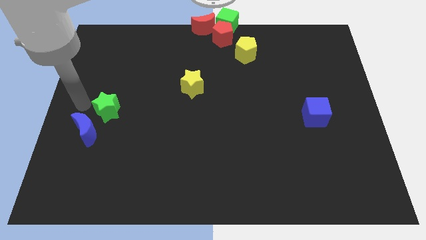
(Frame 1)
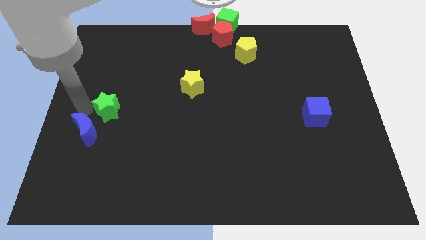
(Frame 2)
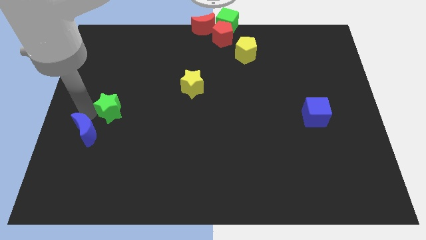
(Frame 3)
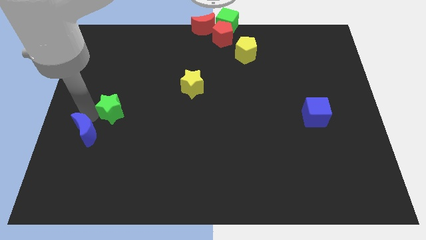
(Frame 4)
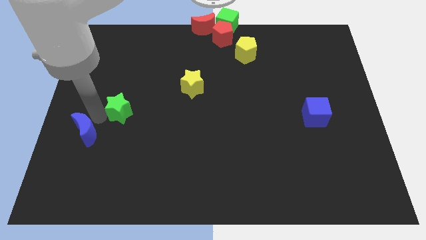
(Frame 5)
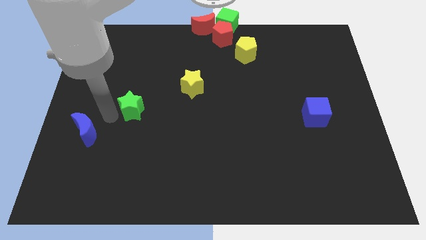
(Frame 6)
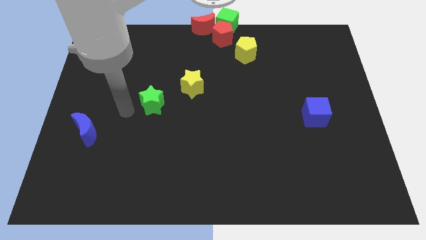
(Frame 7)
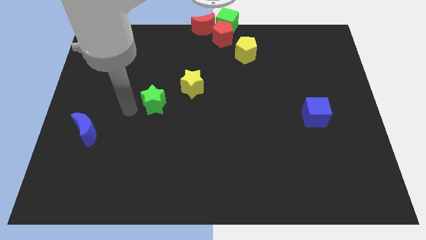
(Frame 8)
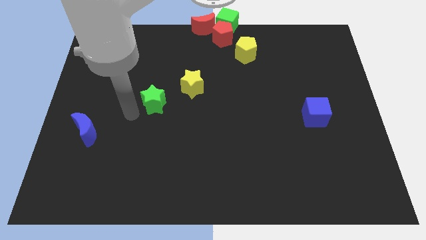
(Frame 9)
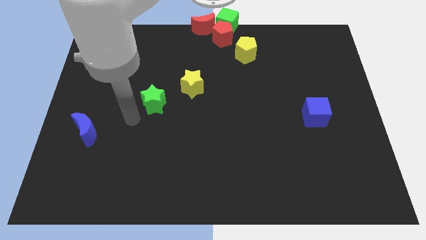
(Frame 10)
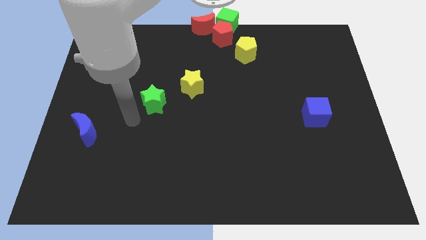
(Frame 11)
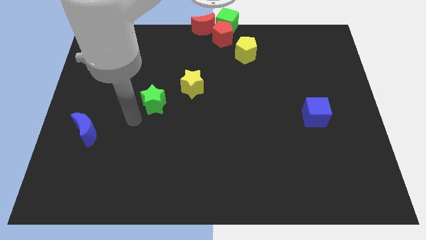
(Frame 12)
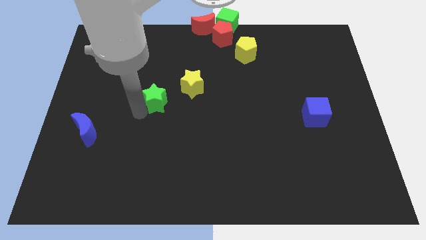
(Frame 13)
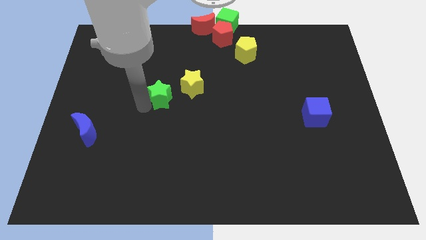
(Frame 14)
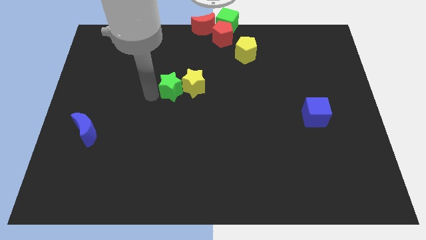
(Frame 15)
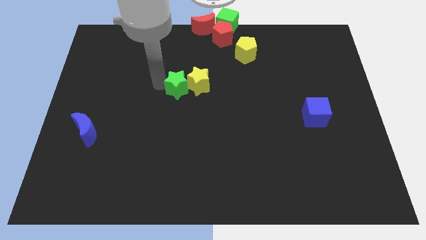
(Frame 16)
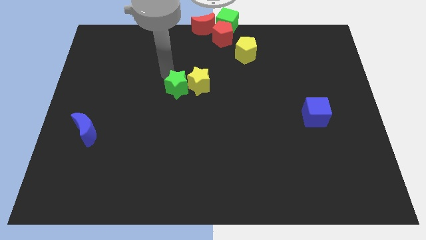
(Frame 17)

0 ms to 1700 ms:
push the green star towards the left side of the yellow star

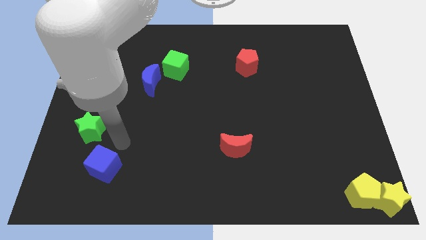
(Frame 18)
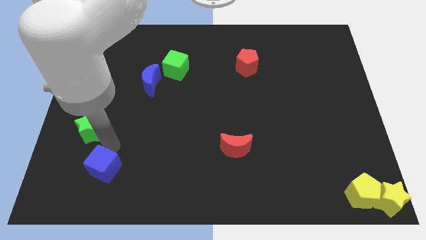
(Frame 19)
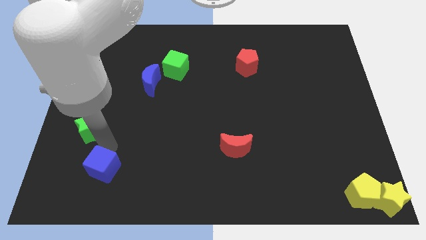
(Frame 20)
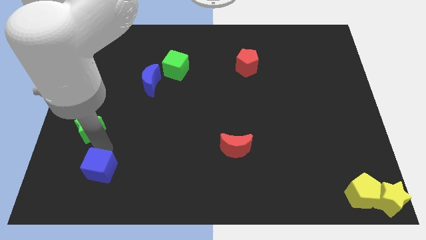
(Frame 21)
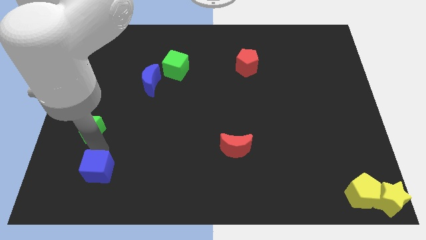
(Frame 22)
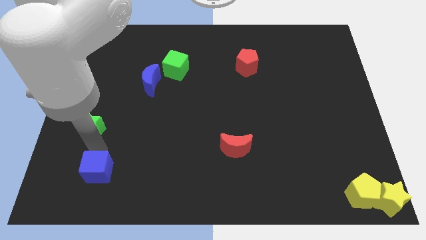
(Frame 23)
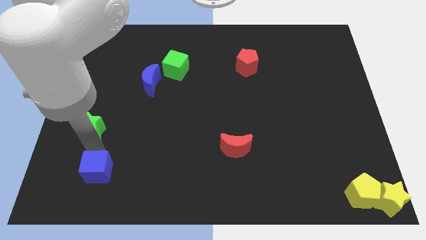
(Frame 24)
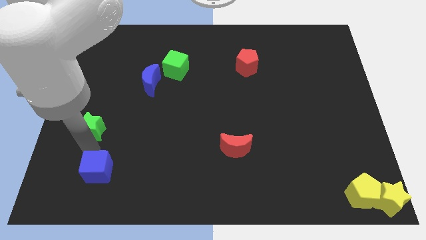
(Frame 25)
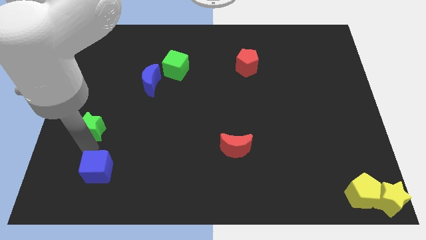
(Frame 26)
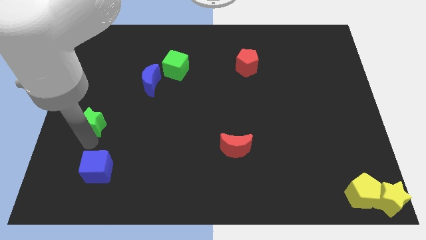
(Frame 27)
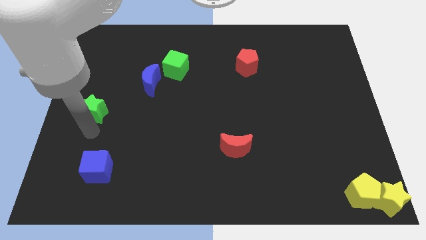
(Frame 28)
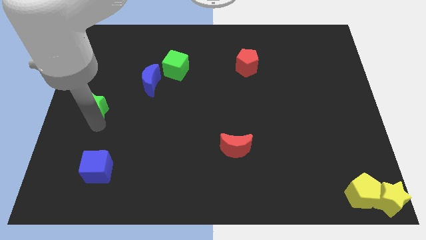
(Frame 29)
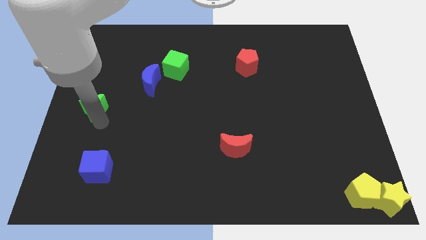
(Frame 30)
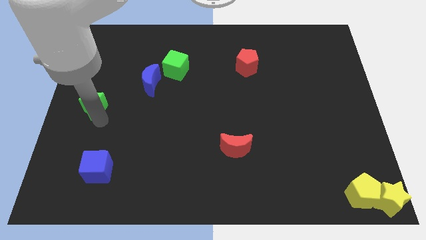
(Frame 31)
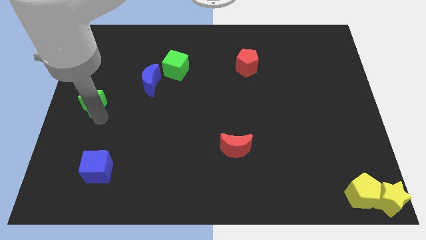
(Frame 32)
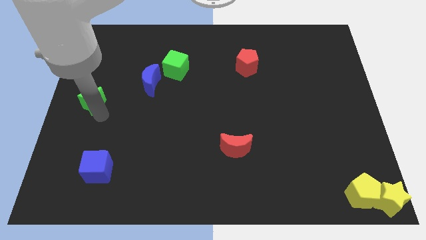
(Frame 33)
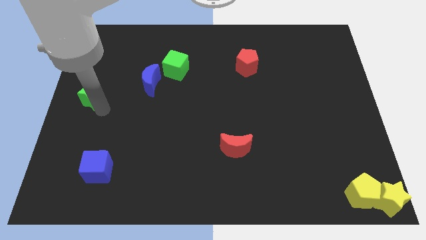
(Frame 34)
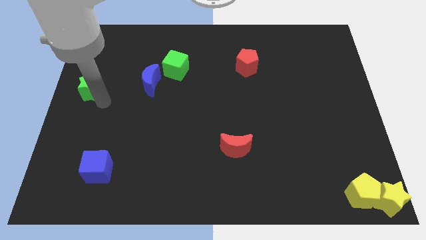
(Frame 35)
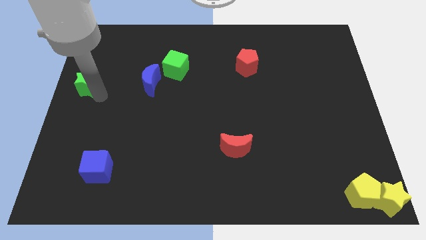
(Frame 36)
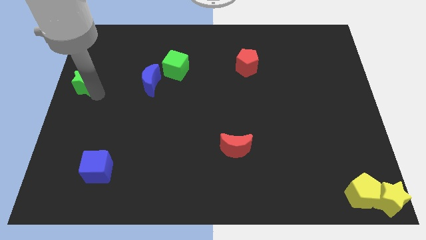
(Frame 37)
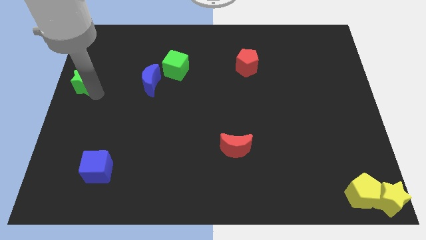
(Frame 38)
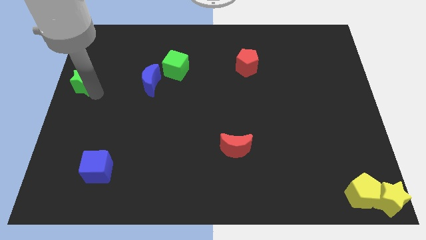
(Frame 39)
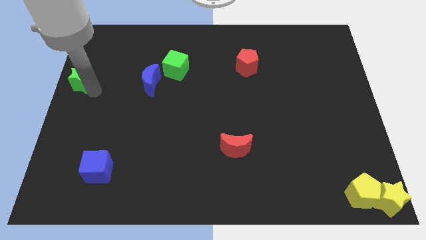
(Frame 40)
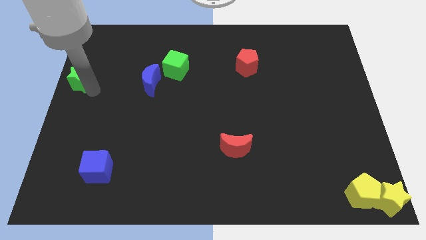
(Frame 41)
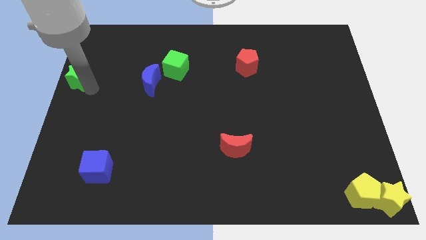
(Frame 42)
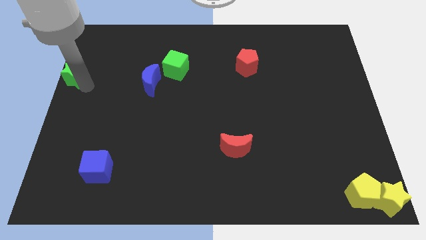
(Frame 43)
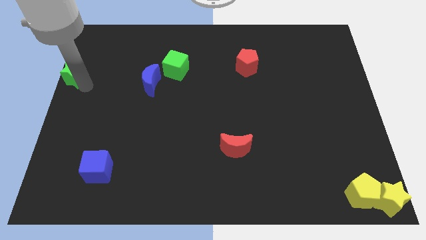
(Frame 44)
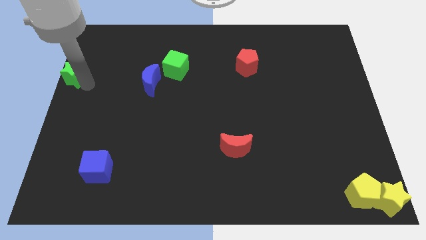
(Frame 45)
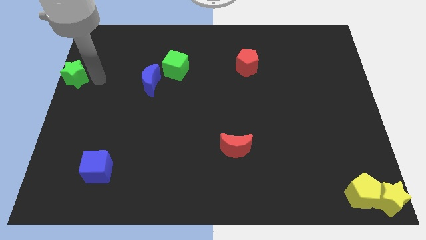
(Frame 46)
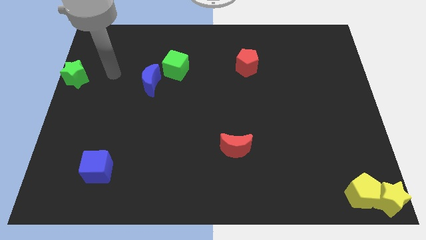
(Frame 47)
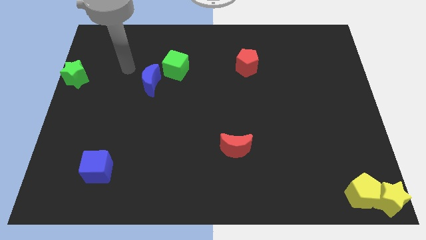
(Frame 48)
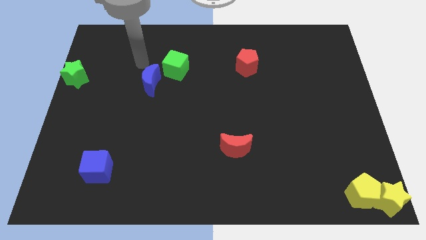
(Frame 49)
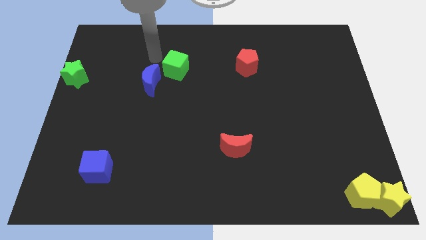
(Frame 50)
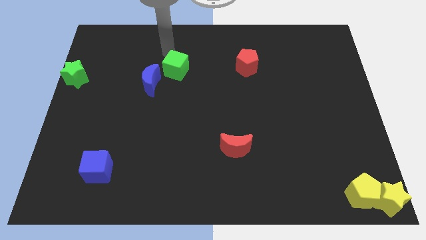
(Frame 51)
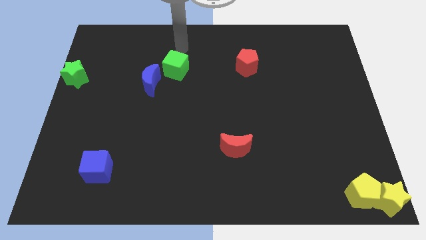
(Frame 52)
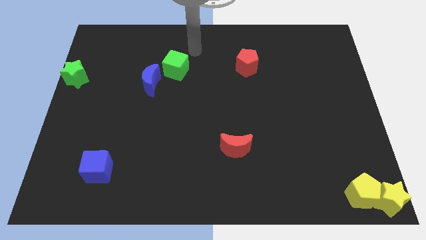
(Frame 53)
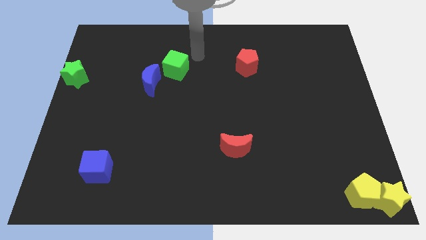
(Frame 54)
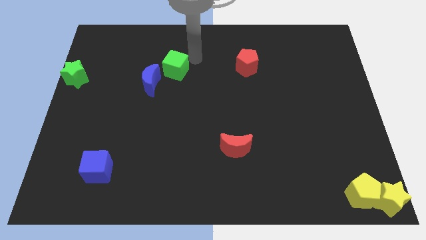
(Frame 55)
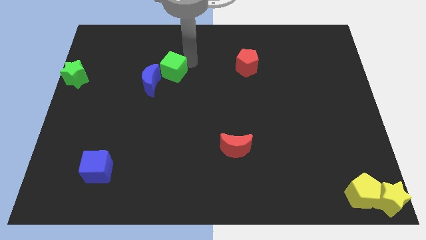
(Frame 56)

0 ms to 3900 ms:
push the green star to the left center of the board

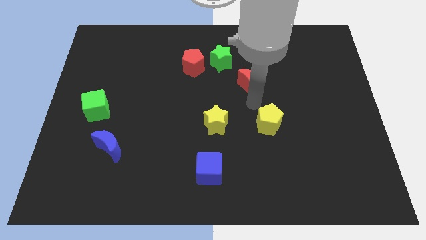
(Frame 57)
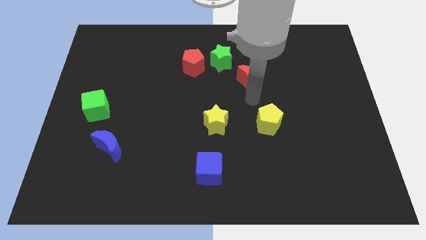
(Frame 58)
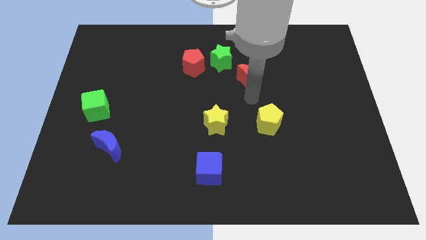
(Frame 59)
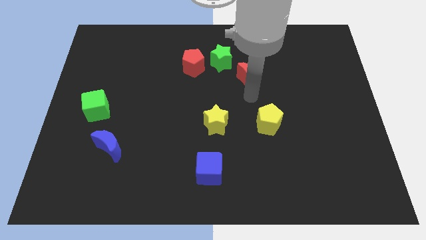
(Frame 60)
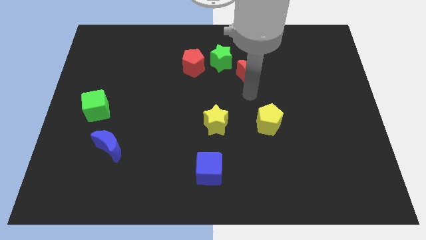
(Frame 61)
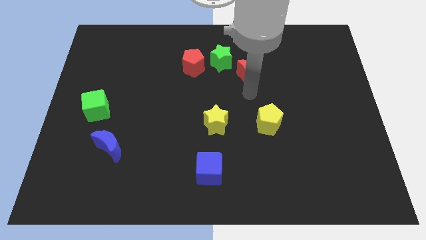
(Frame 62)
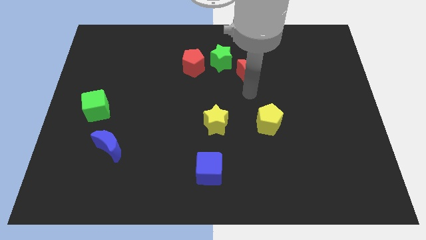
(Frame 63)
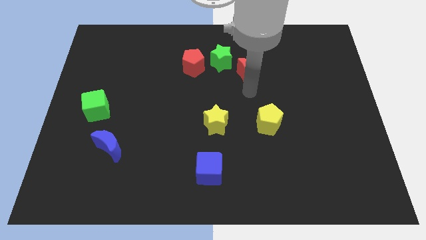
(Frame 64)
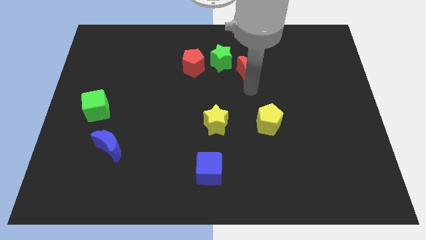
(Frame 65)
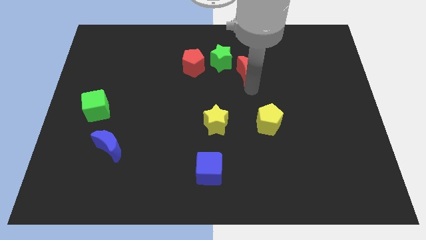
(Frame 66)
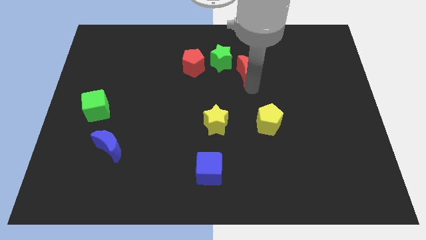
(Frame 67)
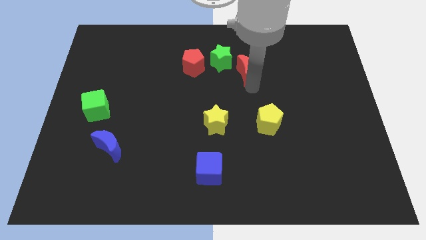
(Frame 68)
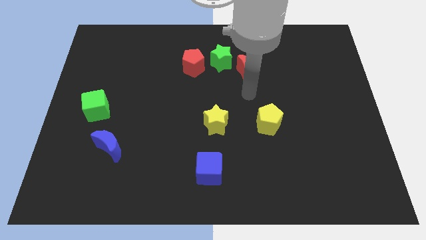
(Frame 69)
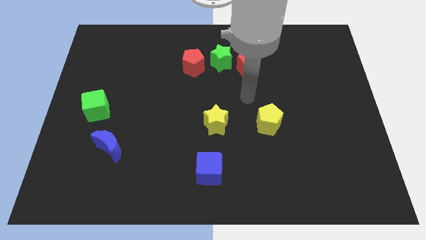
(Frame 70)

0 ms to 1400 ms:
drag the red moon slightly upwards

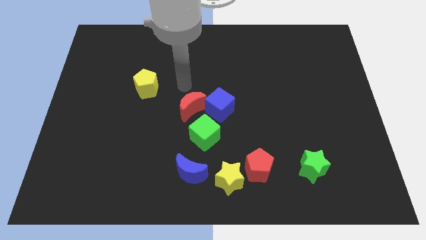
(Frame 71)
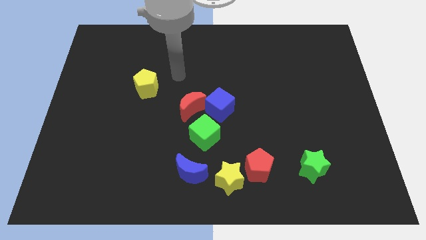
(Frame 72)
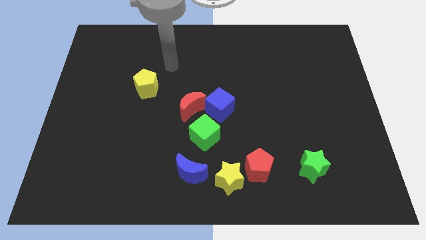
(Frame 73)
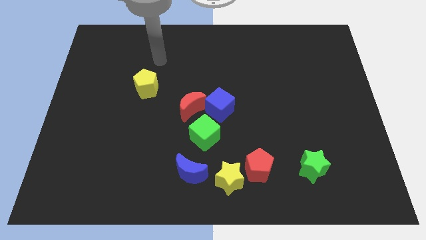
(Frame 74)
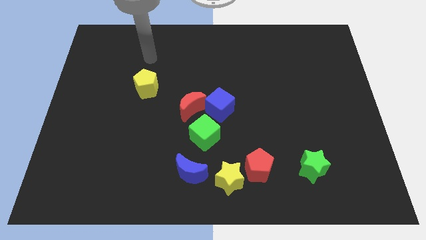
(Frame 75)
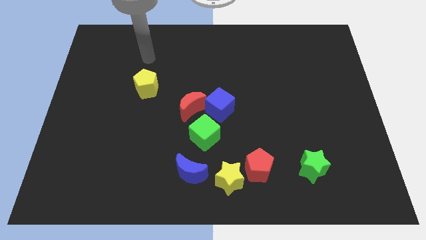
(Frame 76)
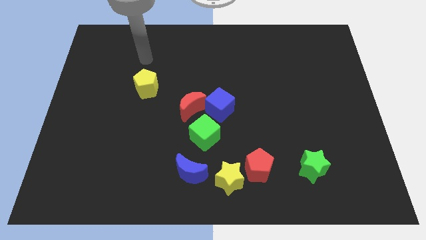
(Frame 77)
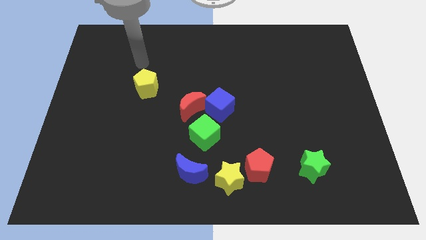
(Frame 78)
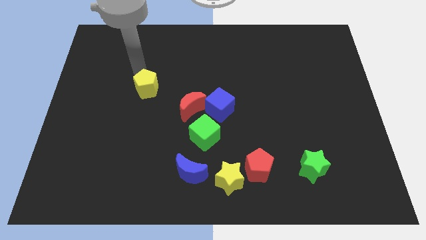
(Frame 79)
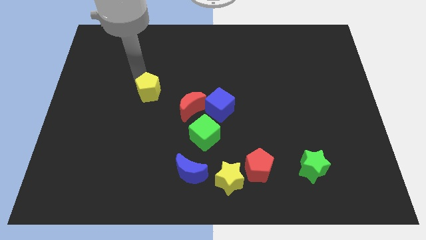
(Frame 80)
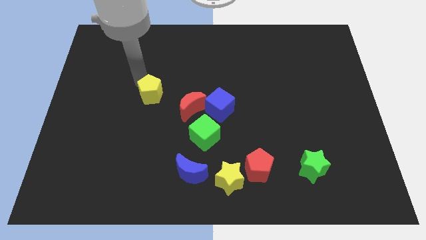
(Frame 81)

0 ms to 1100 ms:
touch the yellow pentagon slightly

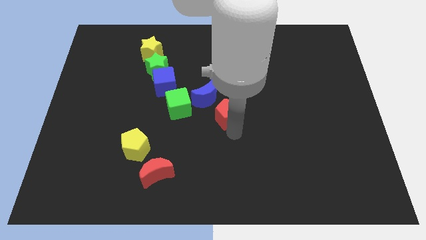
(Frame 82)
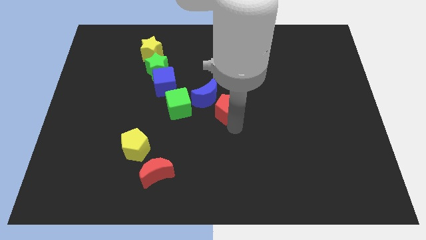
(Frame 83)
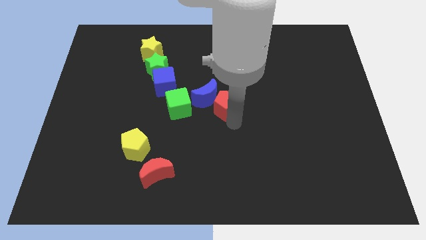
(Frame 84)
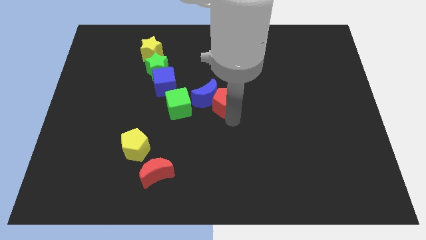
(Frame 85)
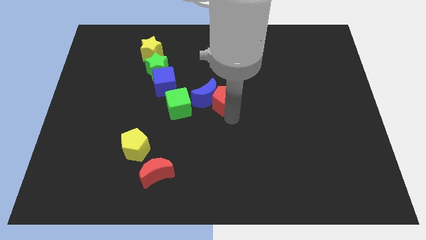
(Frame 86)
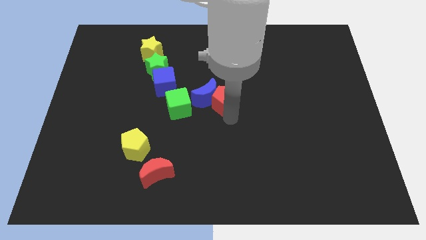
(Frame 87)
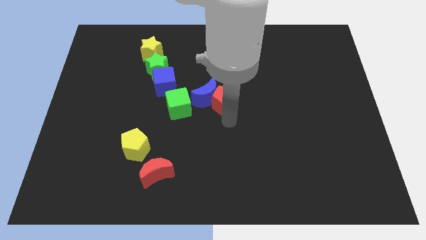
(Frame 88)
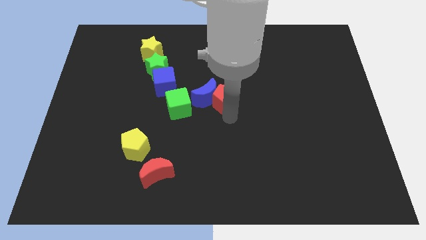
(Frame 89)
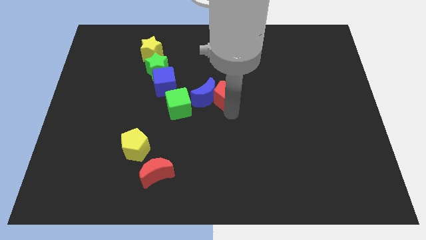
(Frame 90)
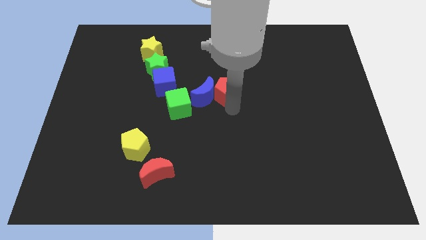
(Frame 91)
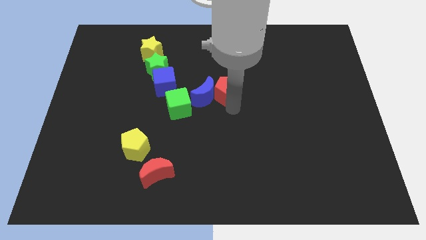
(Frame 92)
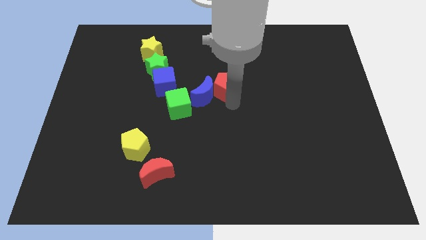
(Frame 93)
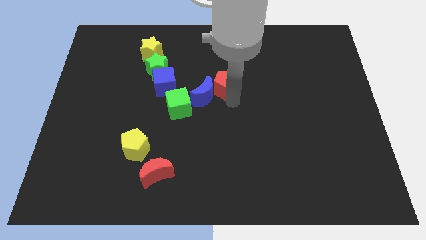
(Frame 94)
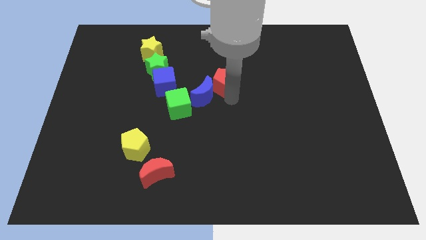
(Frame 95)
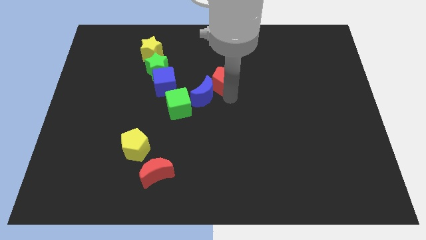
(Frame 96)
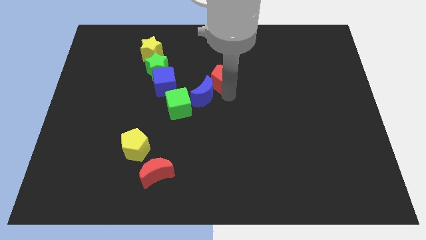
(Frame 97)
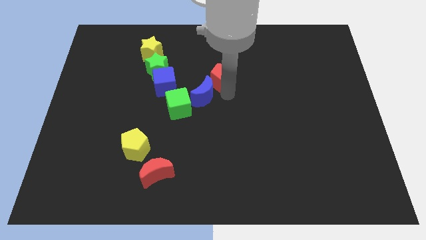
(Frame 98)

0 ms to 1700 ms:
place the red pentagon diagonally top right to the blue moon
